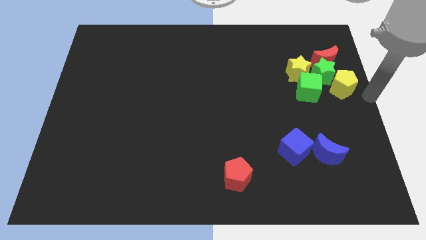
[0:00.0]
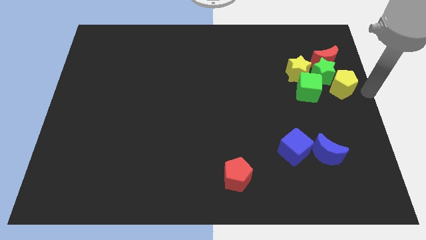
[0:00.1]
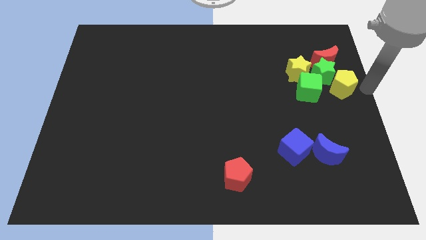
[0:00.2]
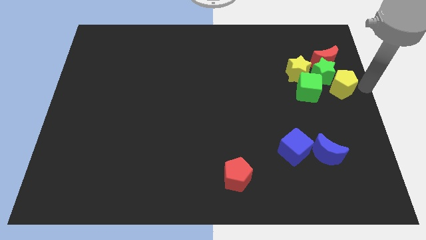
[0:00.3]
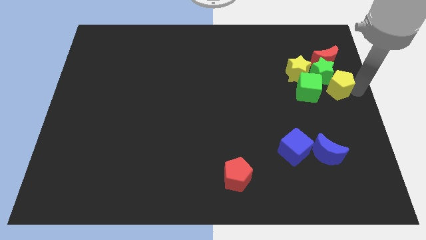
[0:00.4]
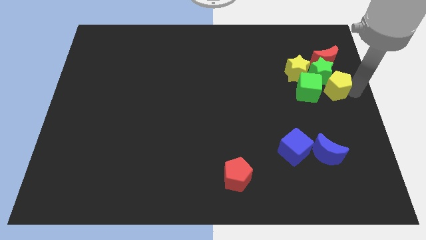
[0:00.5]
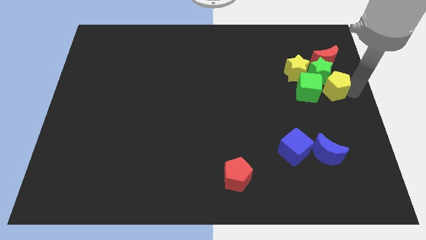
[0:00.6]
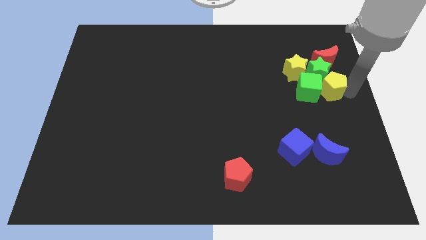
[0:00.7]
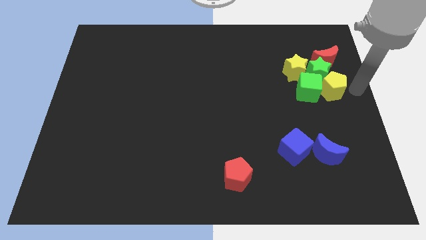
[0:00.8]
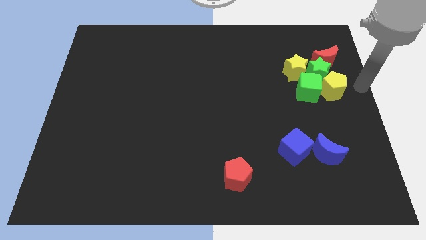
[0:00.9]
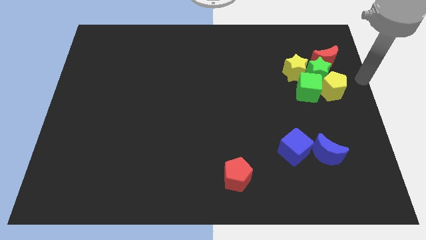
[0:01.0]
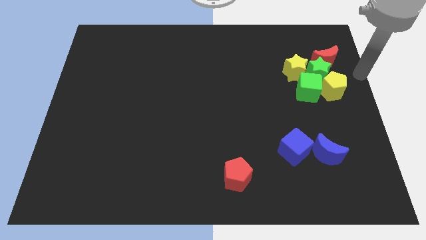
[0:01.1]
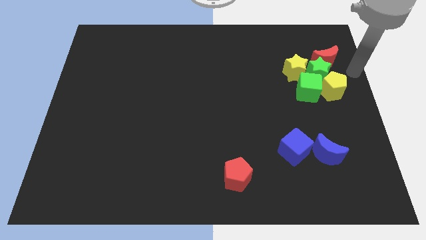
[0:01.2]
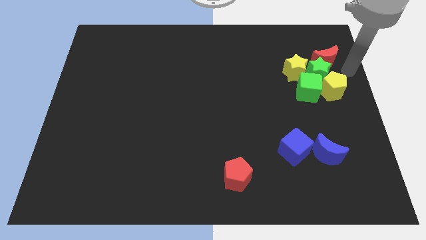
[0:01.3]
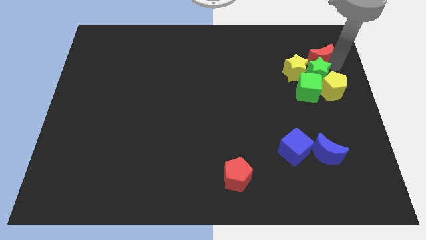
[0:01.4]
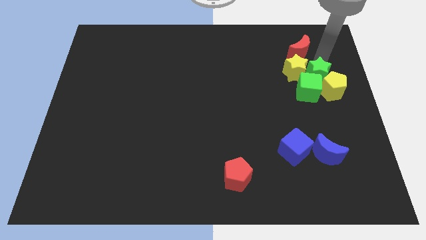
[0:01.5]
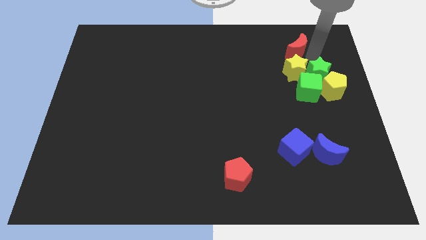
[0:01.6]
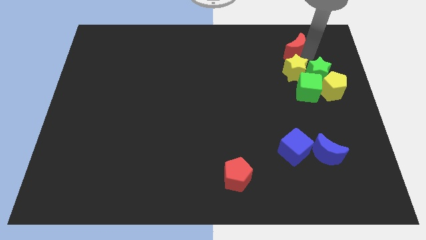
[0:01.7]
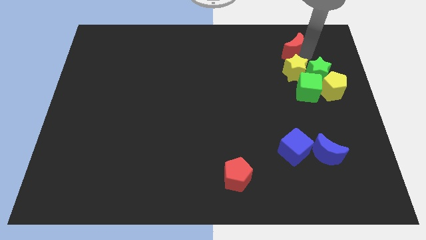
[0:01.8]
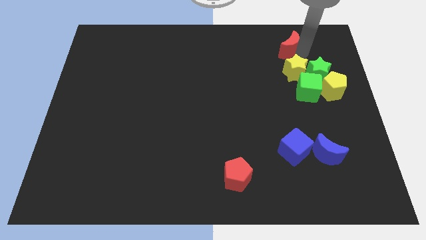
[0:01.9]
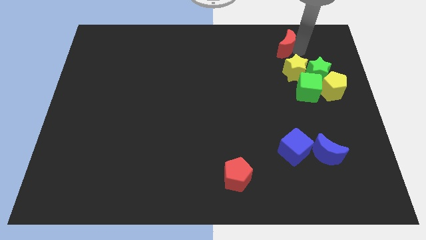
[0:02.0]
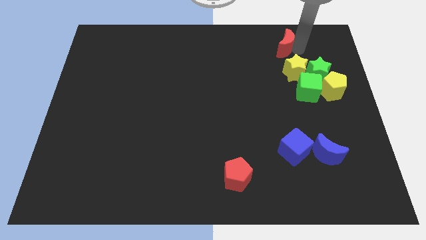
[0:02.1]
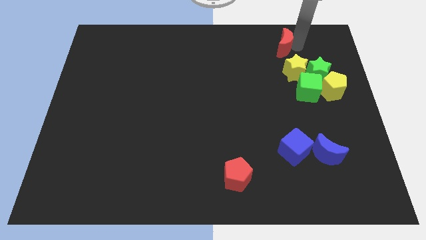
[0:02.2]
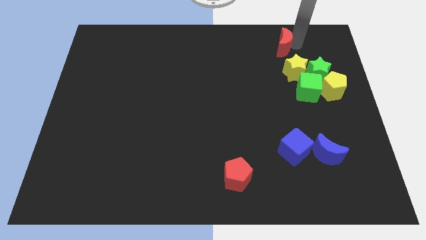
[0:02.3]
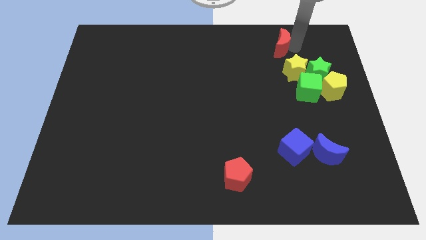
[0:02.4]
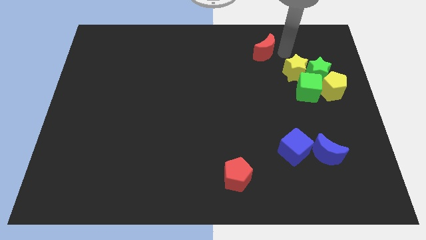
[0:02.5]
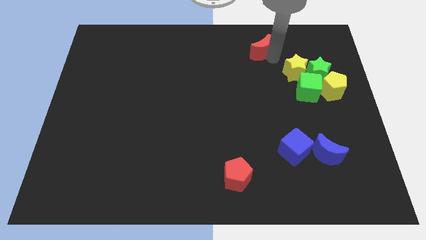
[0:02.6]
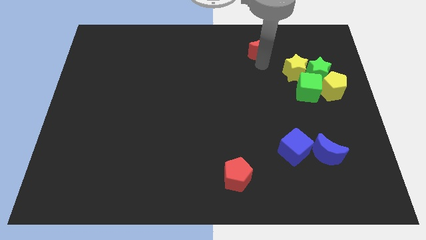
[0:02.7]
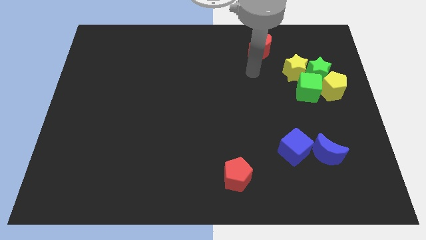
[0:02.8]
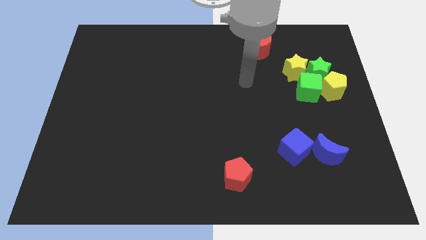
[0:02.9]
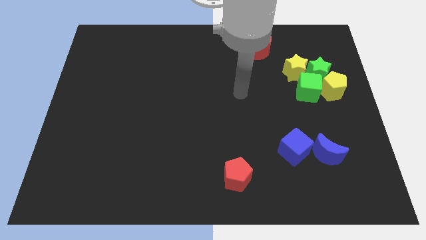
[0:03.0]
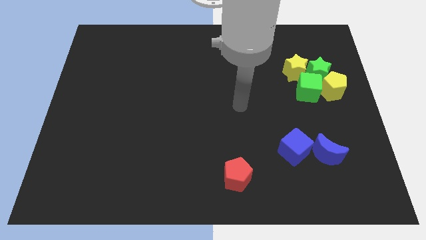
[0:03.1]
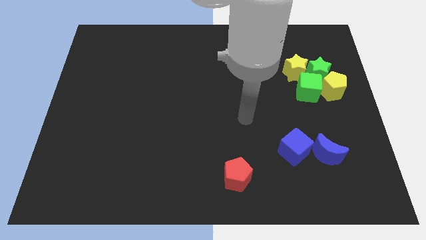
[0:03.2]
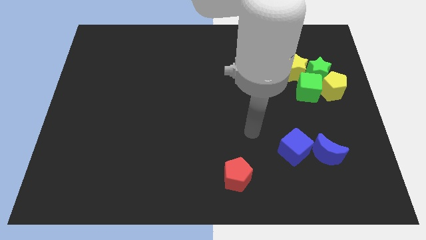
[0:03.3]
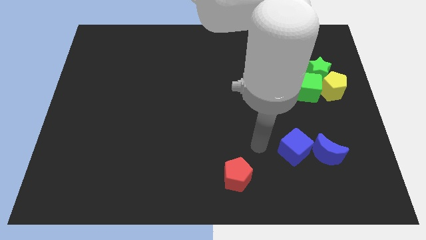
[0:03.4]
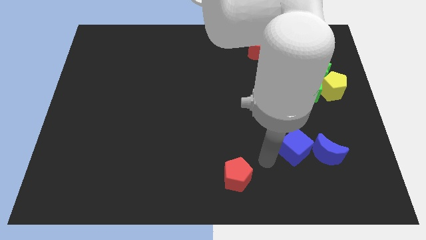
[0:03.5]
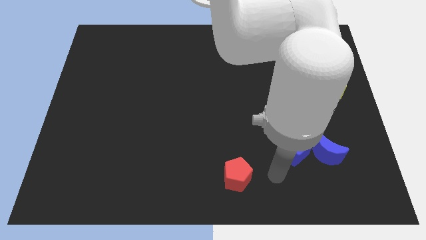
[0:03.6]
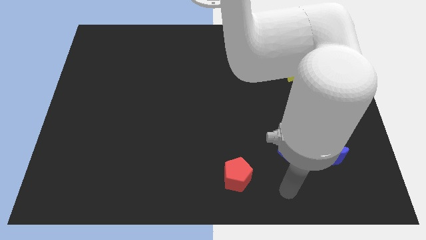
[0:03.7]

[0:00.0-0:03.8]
push the red crescent slightly up

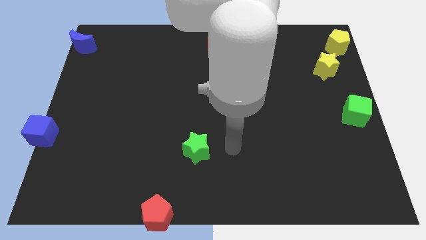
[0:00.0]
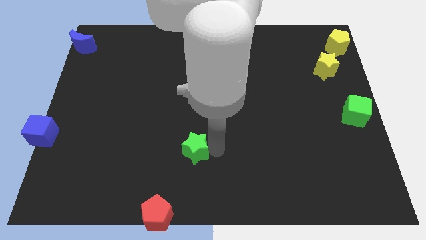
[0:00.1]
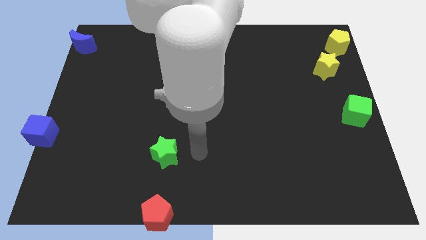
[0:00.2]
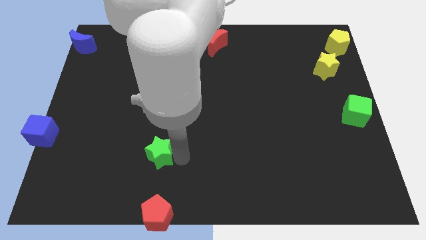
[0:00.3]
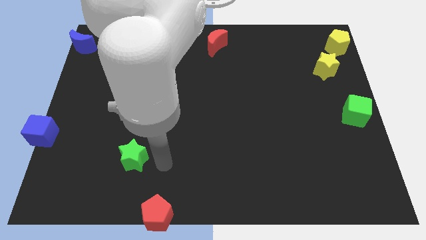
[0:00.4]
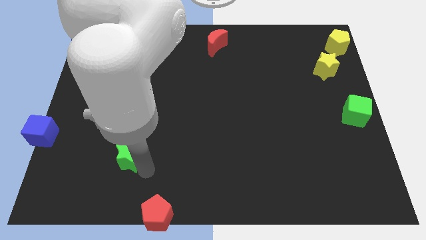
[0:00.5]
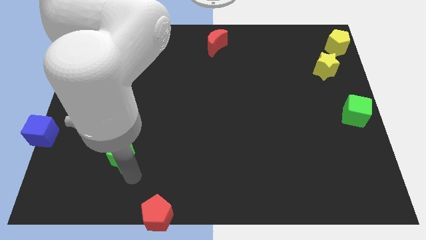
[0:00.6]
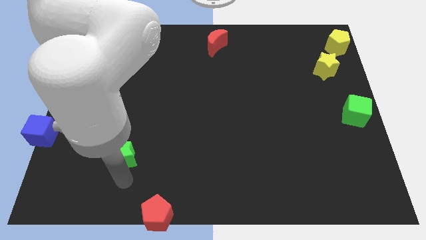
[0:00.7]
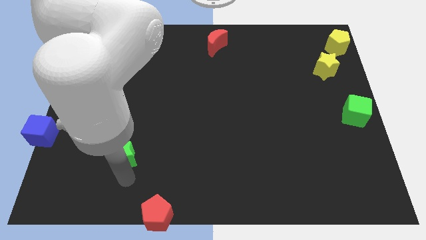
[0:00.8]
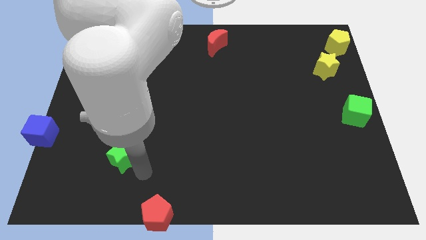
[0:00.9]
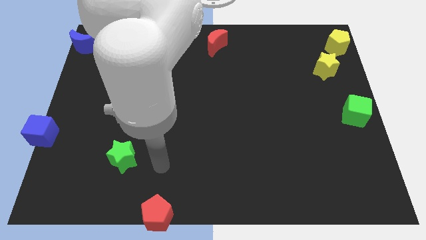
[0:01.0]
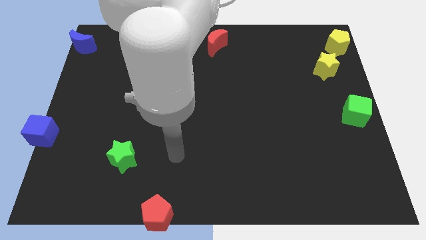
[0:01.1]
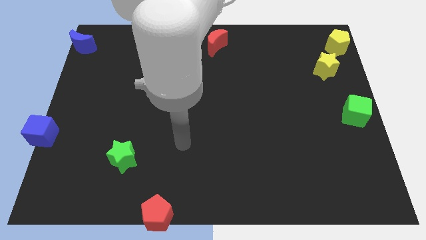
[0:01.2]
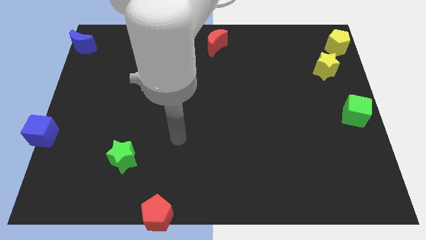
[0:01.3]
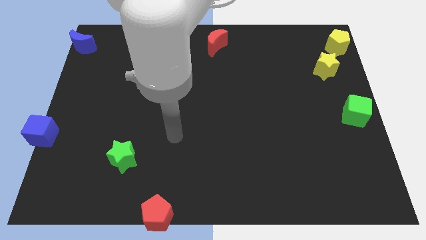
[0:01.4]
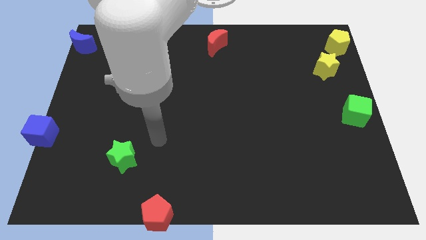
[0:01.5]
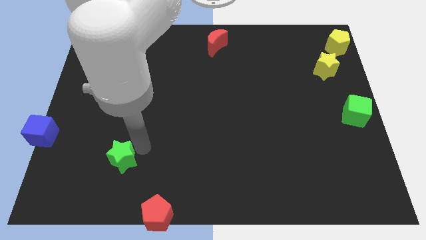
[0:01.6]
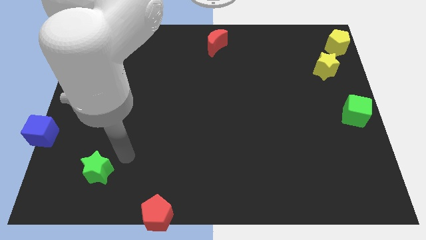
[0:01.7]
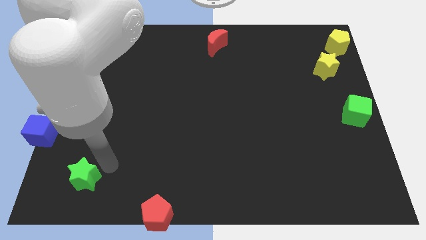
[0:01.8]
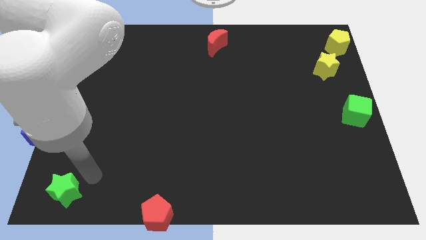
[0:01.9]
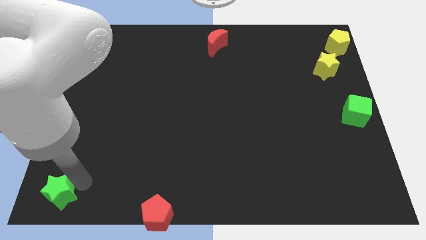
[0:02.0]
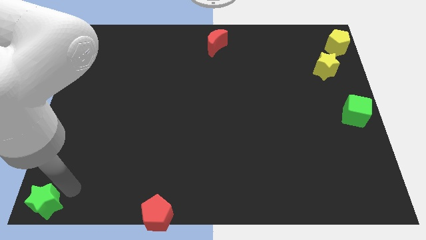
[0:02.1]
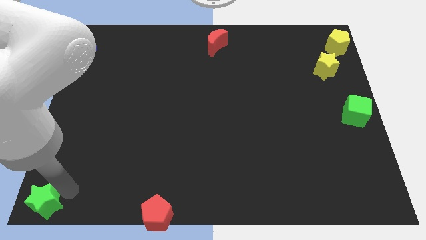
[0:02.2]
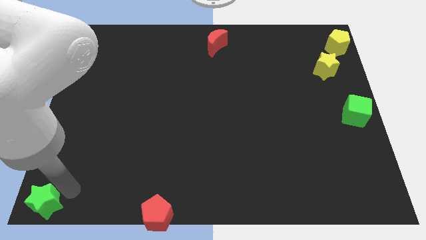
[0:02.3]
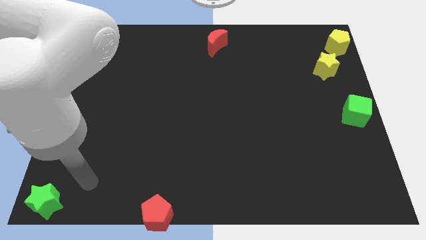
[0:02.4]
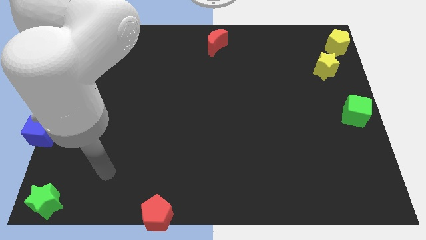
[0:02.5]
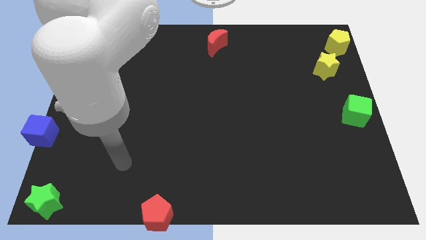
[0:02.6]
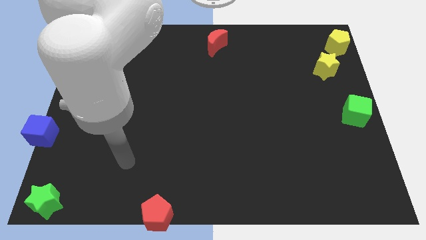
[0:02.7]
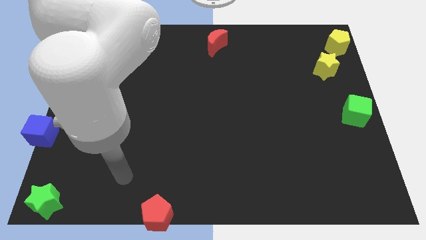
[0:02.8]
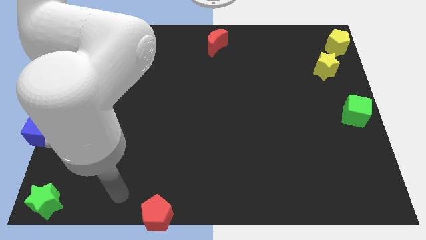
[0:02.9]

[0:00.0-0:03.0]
push the green star towards the bottom left of the board

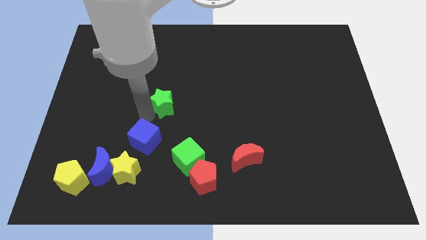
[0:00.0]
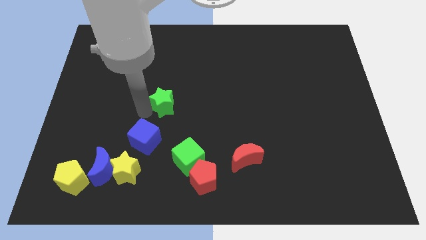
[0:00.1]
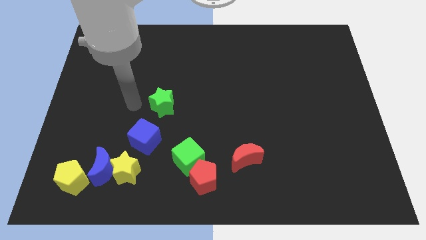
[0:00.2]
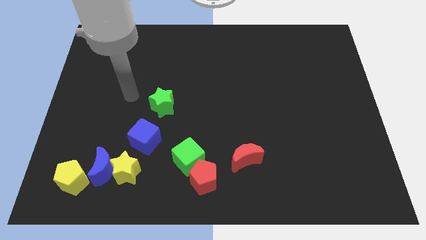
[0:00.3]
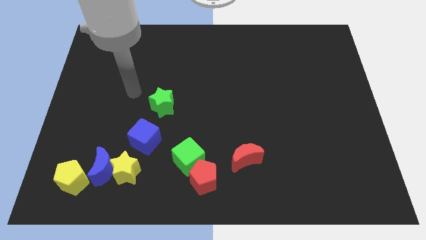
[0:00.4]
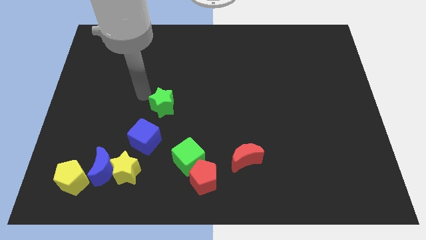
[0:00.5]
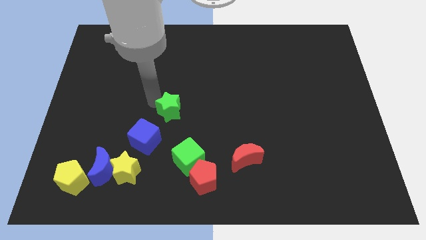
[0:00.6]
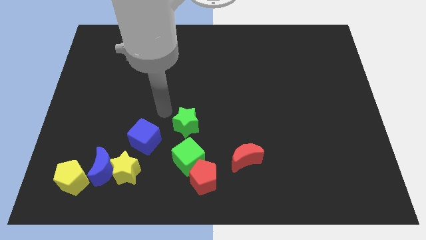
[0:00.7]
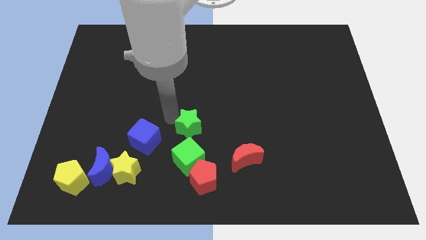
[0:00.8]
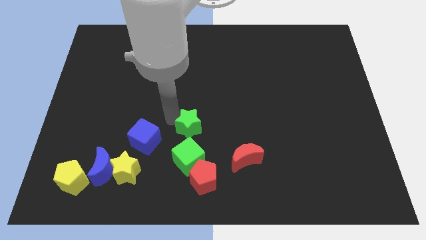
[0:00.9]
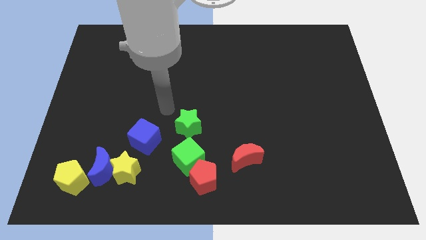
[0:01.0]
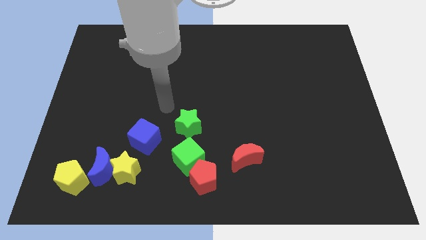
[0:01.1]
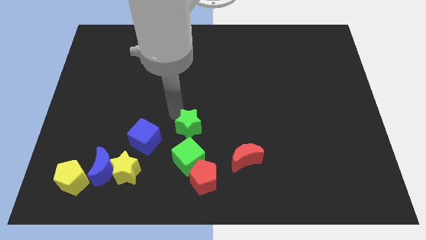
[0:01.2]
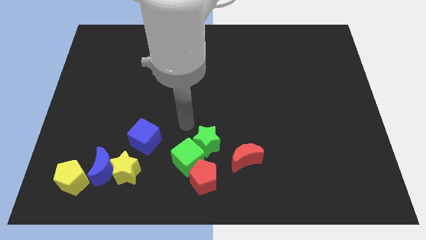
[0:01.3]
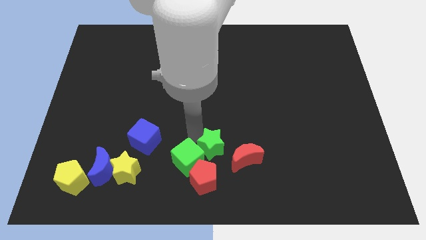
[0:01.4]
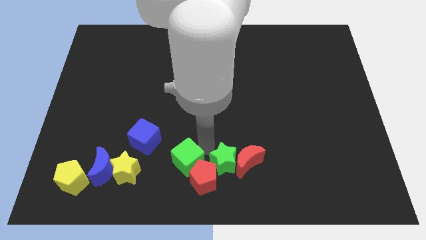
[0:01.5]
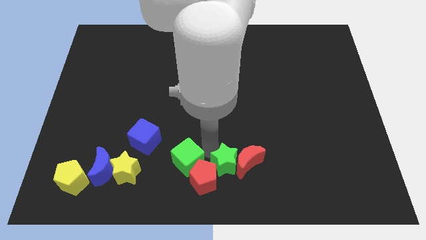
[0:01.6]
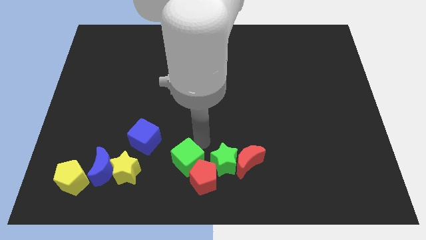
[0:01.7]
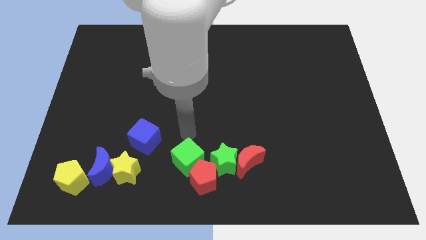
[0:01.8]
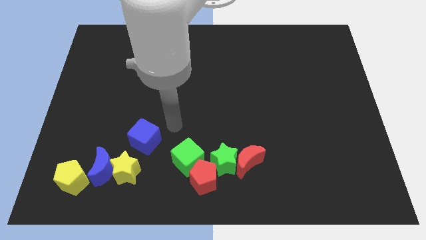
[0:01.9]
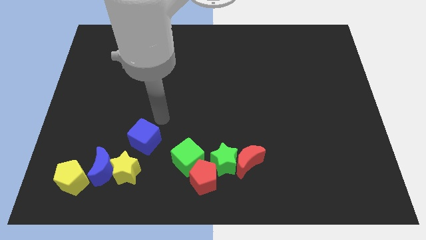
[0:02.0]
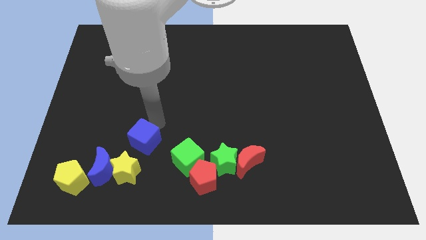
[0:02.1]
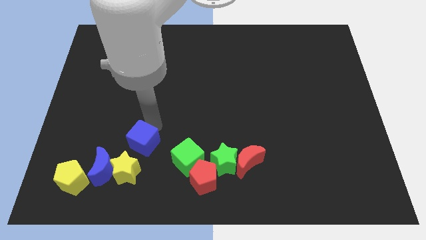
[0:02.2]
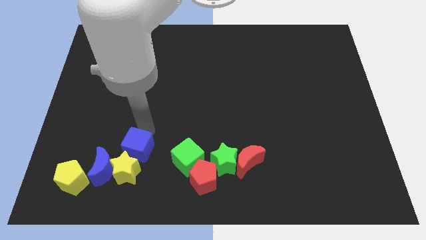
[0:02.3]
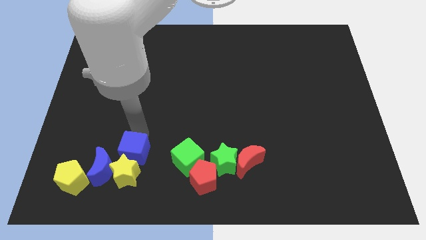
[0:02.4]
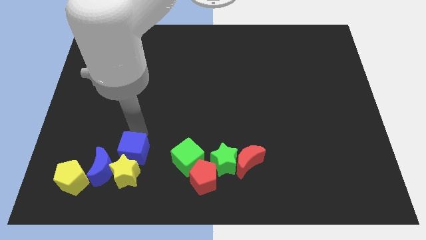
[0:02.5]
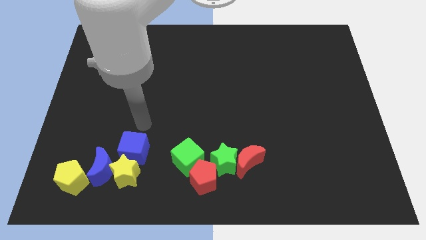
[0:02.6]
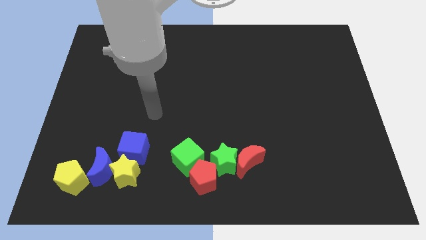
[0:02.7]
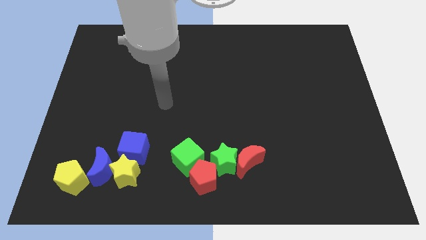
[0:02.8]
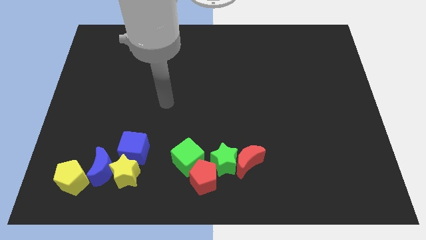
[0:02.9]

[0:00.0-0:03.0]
push the blue cube into the yellow star
